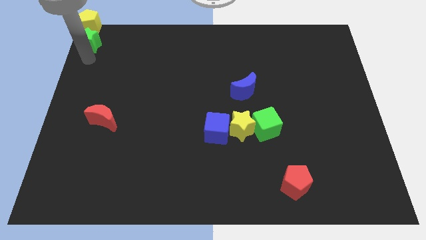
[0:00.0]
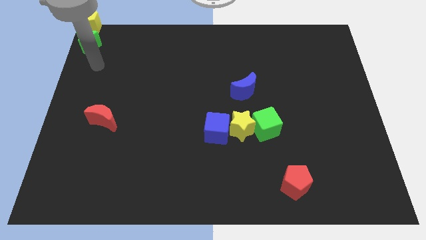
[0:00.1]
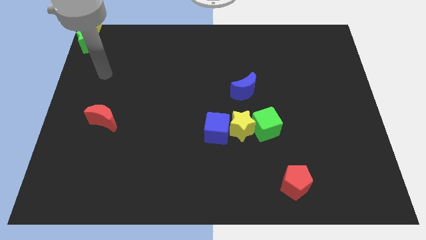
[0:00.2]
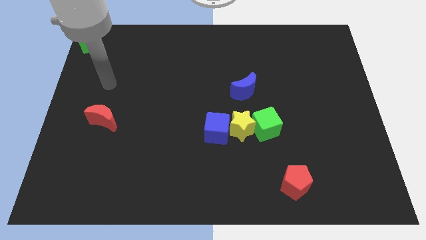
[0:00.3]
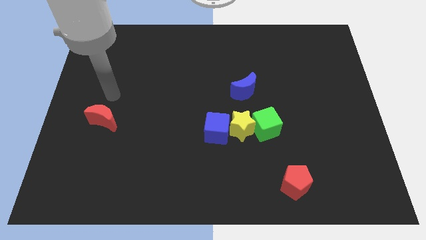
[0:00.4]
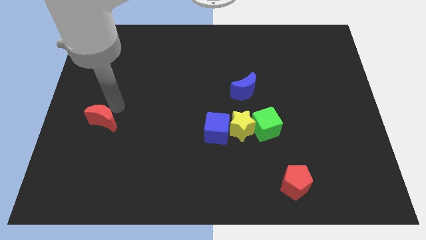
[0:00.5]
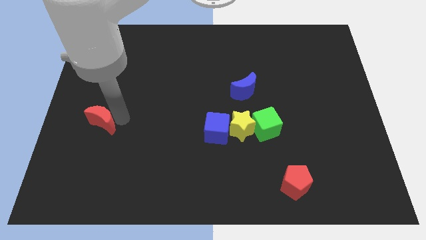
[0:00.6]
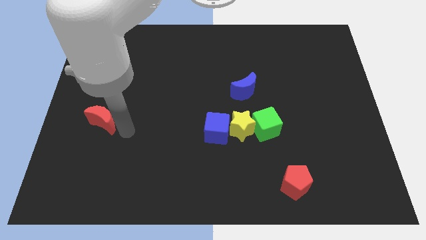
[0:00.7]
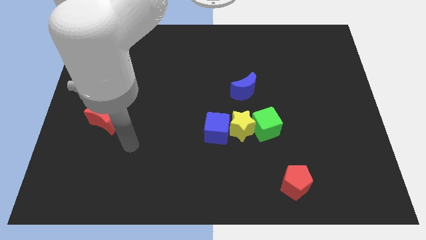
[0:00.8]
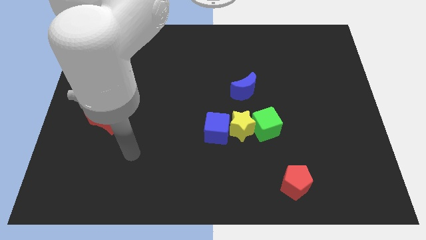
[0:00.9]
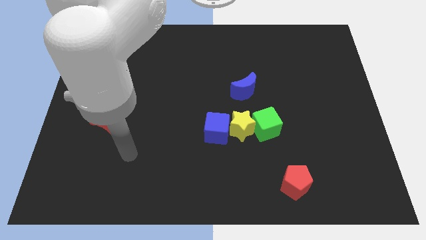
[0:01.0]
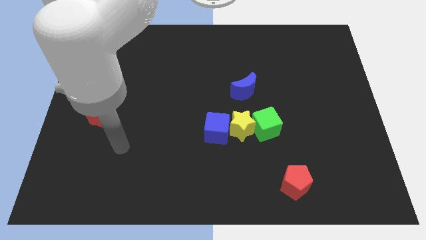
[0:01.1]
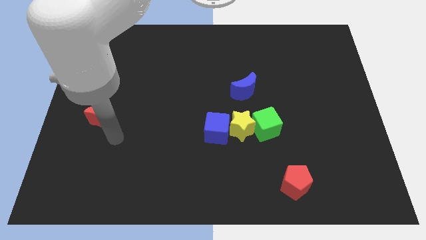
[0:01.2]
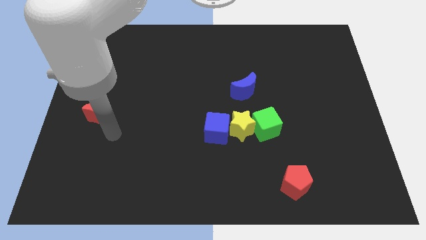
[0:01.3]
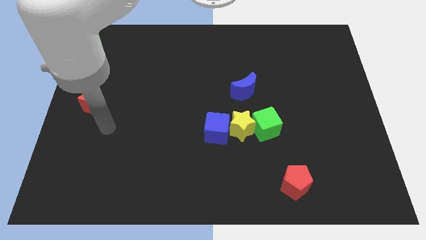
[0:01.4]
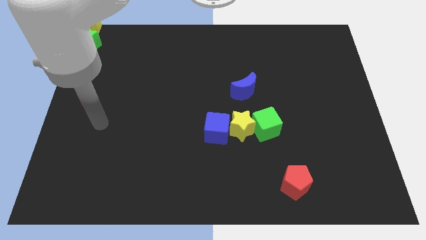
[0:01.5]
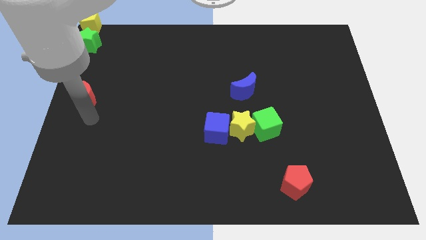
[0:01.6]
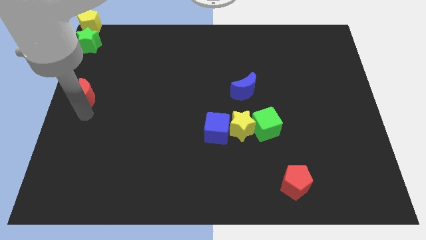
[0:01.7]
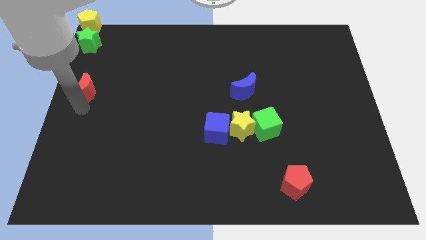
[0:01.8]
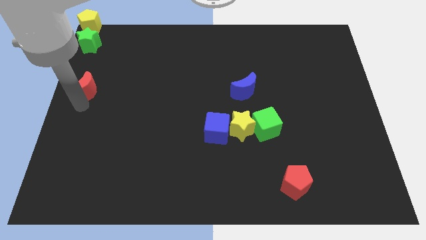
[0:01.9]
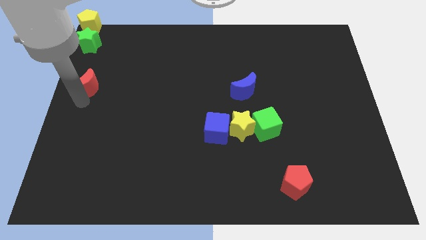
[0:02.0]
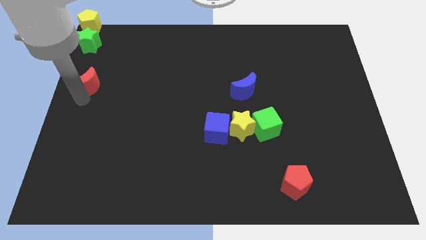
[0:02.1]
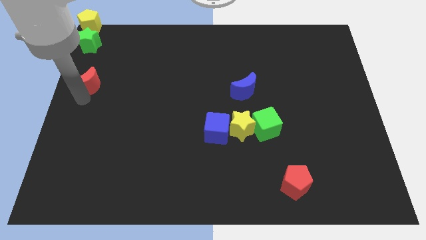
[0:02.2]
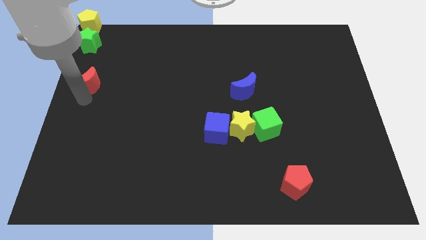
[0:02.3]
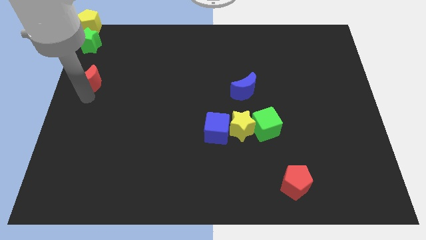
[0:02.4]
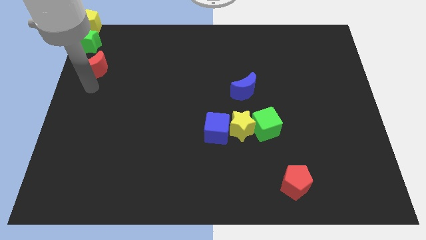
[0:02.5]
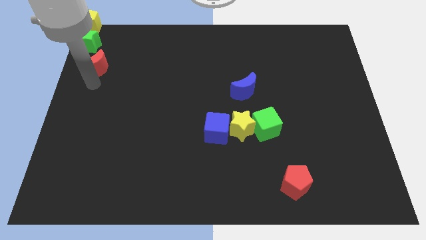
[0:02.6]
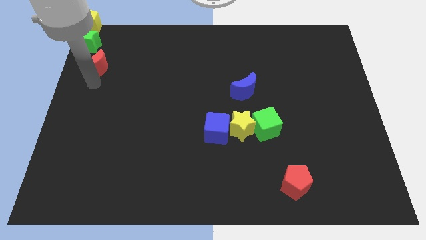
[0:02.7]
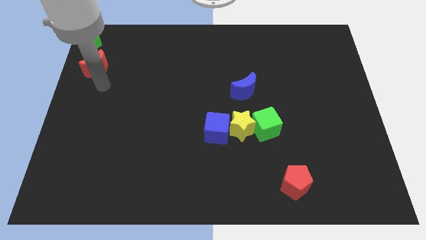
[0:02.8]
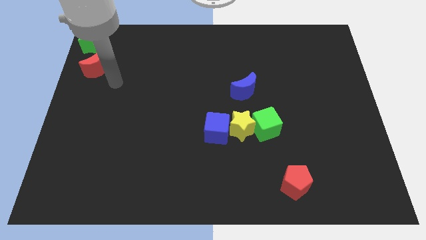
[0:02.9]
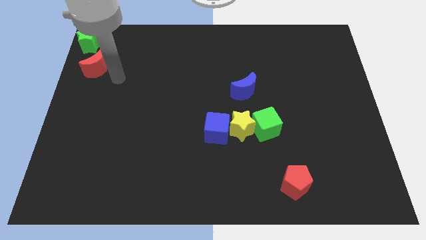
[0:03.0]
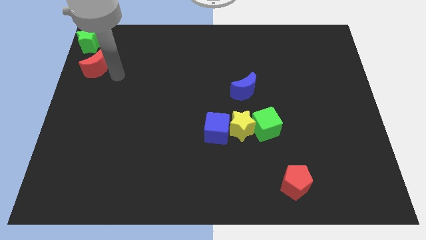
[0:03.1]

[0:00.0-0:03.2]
put the red crescent below the green star

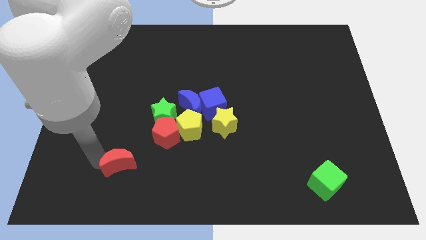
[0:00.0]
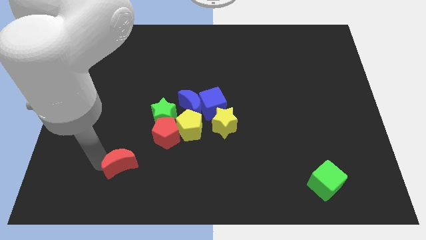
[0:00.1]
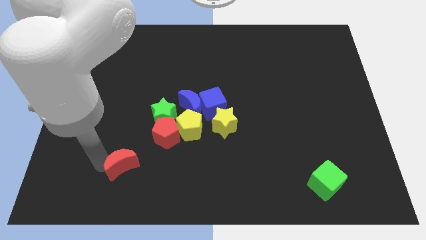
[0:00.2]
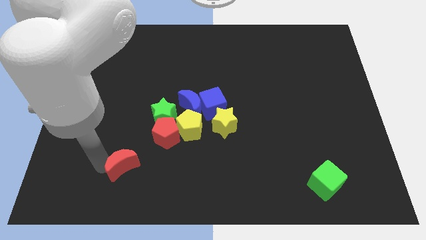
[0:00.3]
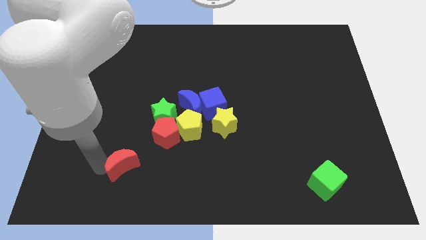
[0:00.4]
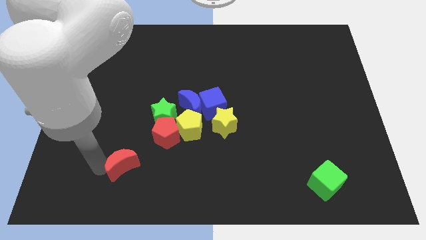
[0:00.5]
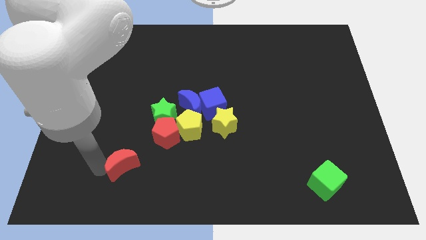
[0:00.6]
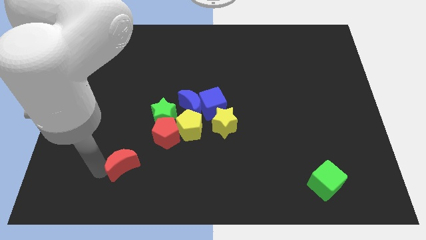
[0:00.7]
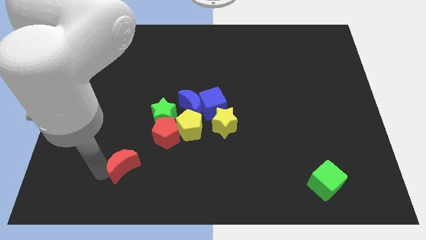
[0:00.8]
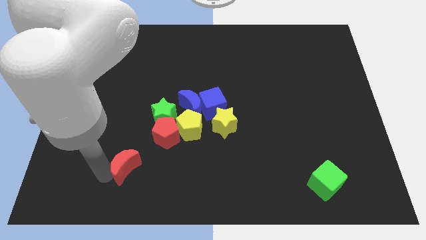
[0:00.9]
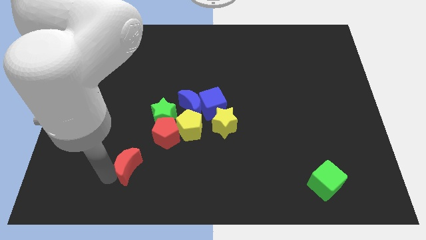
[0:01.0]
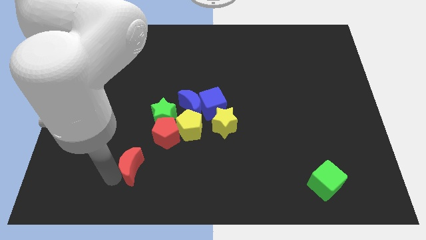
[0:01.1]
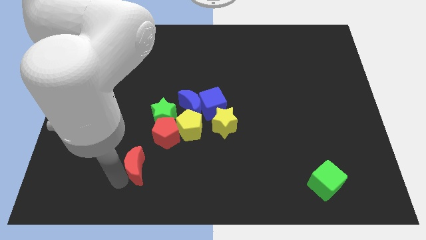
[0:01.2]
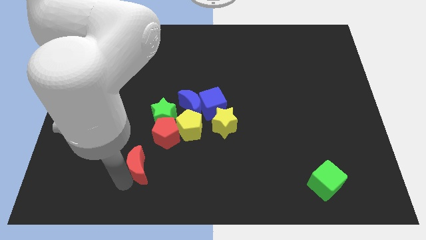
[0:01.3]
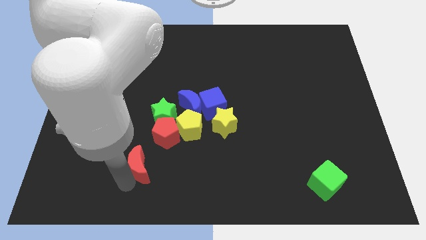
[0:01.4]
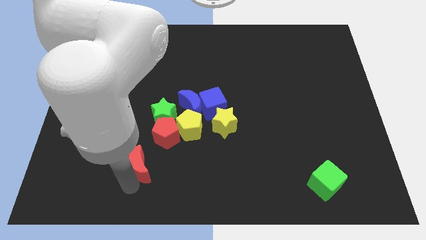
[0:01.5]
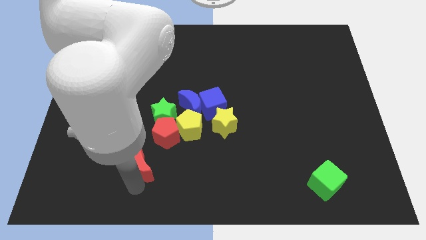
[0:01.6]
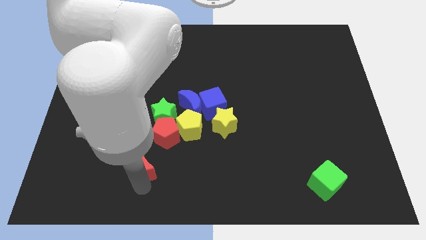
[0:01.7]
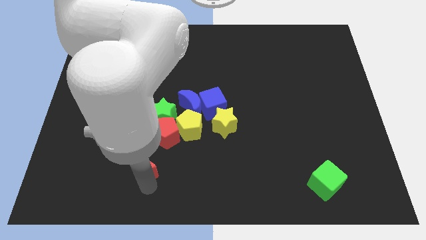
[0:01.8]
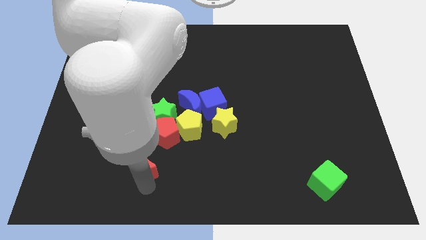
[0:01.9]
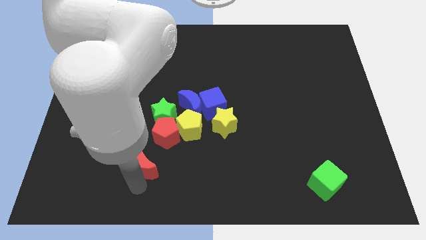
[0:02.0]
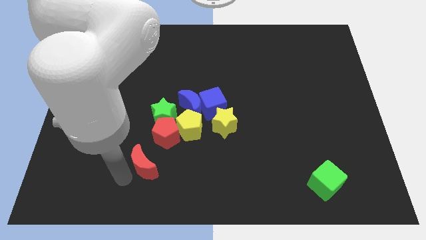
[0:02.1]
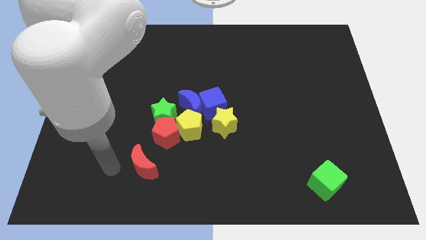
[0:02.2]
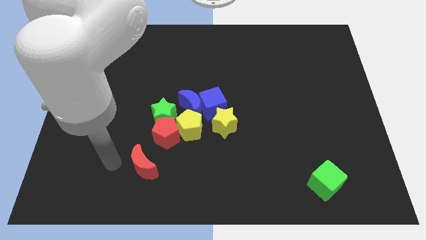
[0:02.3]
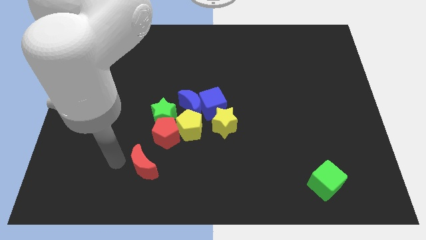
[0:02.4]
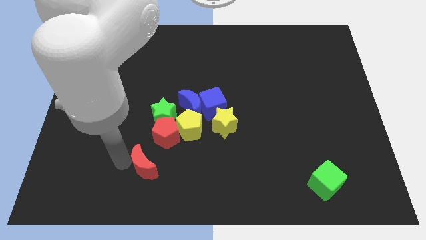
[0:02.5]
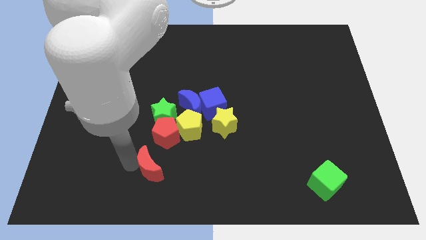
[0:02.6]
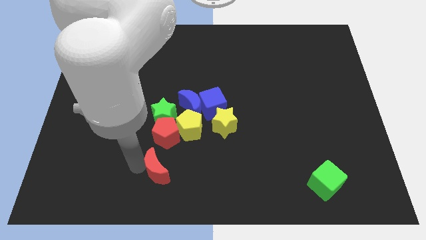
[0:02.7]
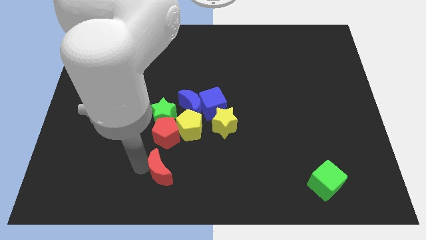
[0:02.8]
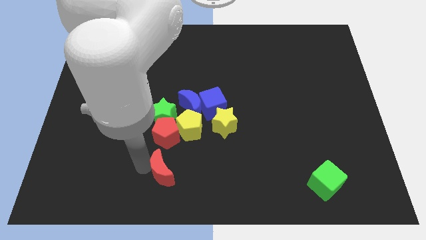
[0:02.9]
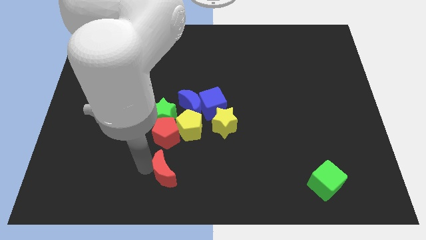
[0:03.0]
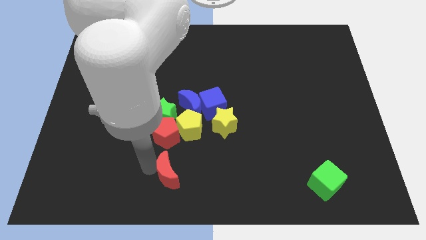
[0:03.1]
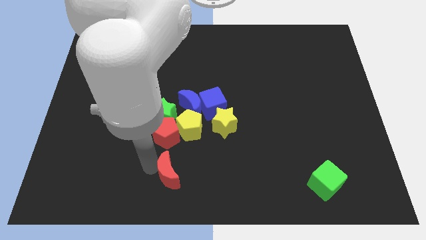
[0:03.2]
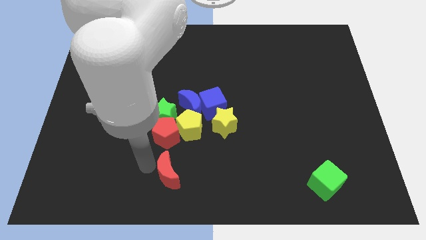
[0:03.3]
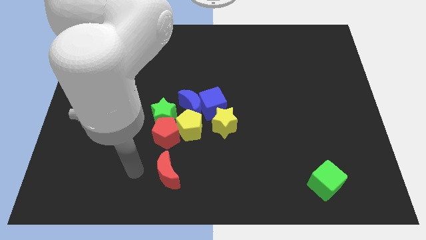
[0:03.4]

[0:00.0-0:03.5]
push the red crescent towards right

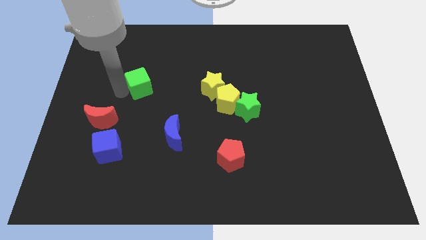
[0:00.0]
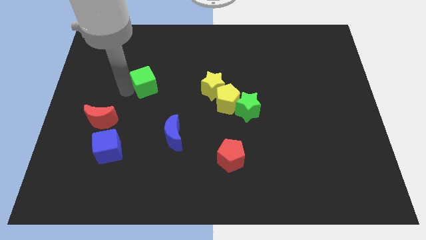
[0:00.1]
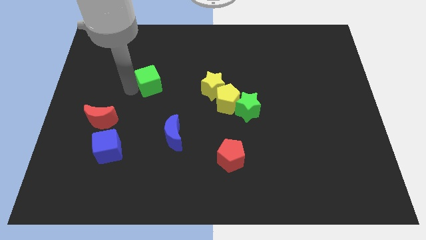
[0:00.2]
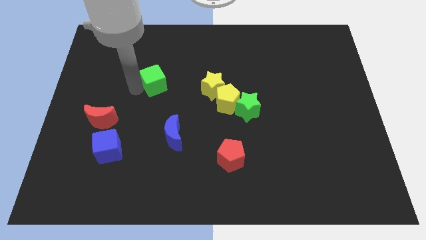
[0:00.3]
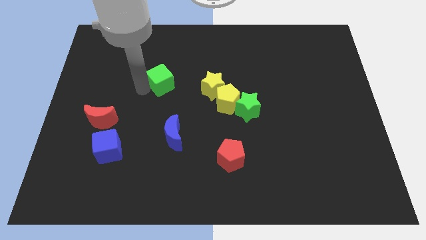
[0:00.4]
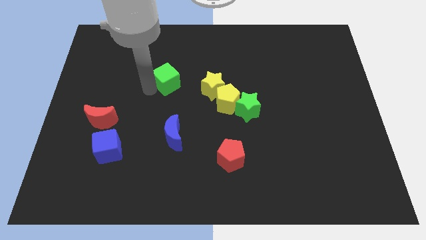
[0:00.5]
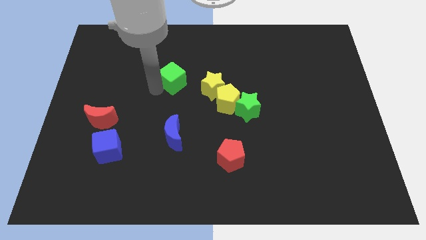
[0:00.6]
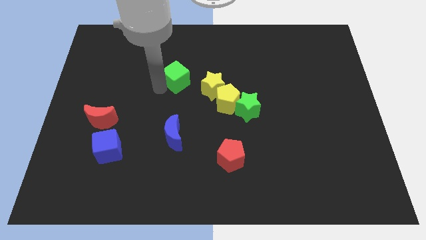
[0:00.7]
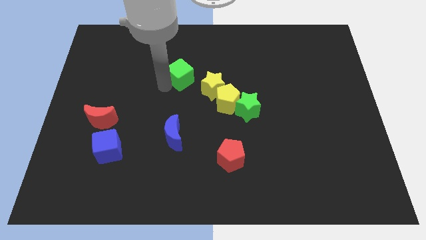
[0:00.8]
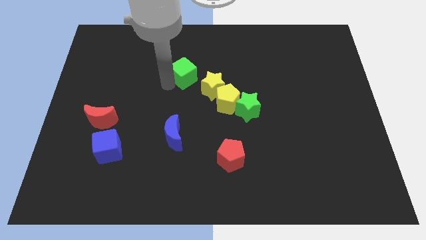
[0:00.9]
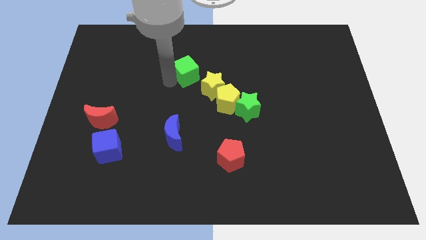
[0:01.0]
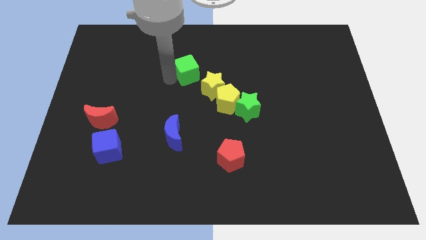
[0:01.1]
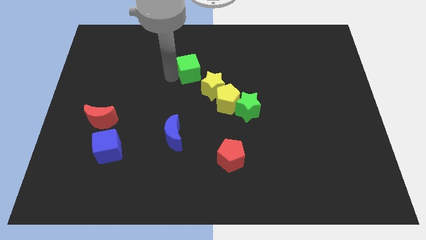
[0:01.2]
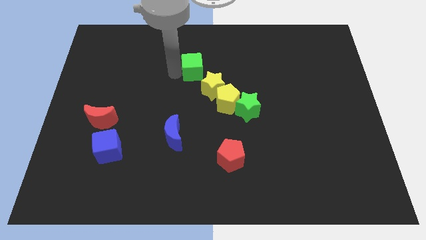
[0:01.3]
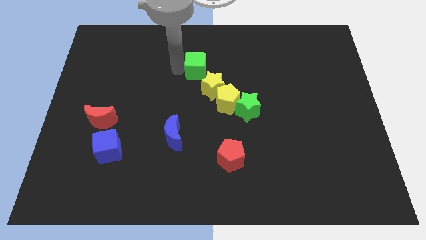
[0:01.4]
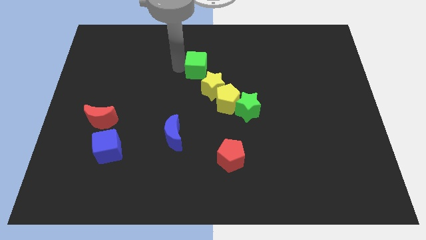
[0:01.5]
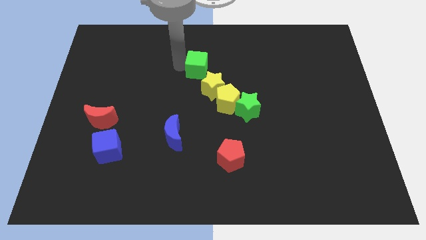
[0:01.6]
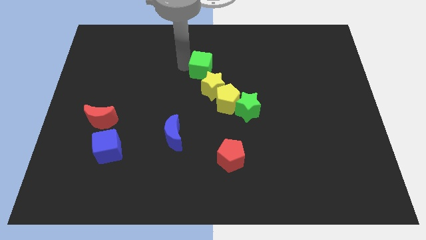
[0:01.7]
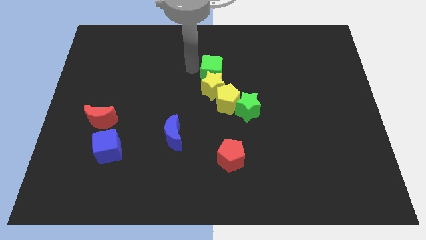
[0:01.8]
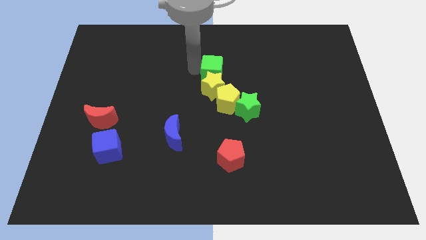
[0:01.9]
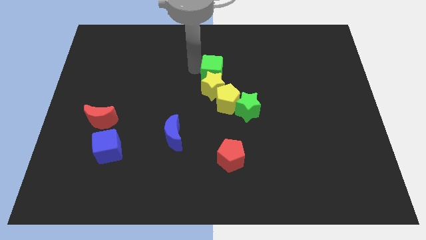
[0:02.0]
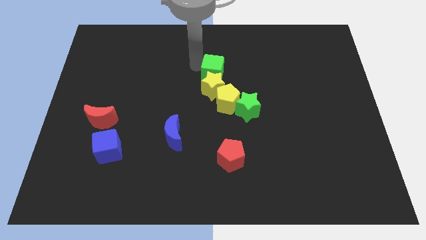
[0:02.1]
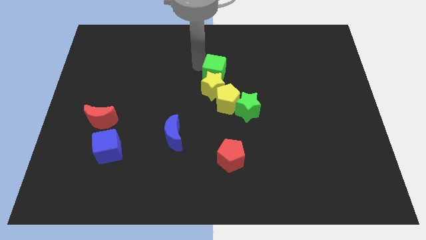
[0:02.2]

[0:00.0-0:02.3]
place the green cube on top of yellow star
